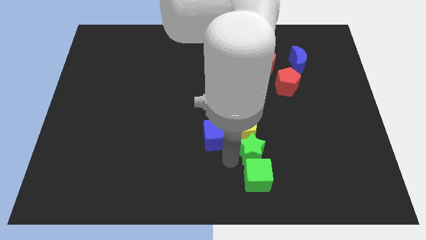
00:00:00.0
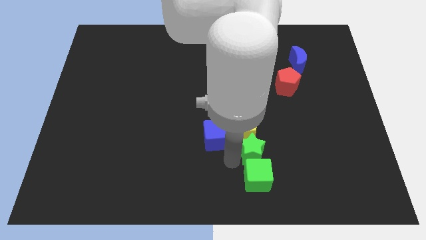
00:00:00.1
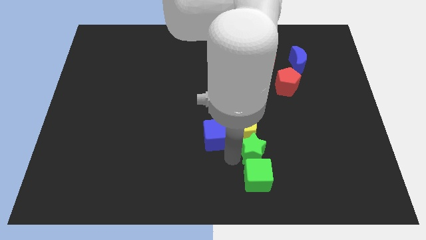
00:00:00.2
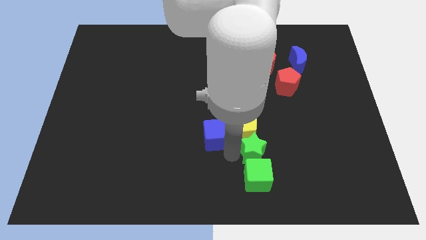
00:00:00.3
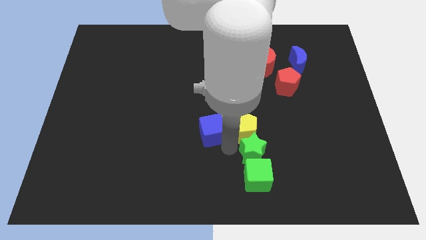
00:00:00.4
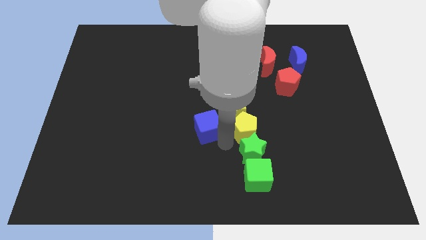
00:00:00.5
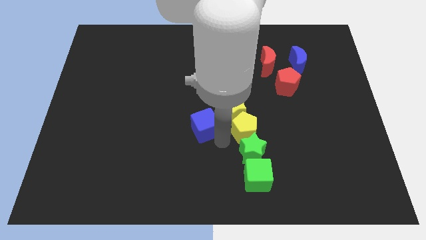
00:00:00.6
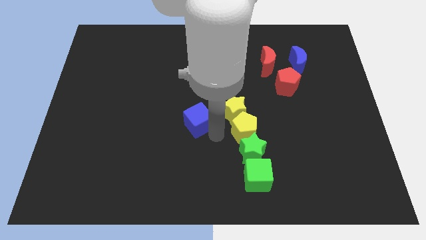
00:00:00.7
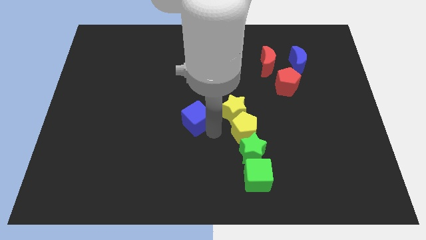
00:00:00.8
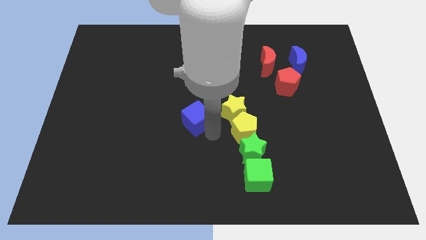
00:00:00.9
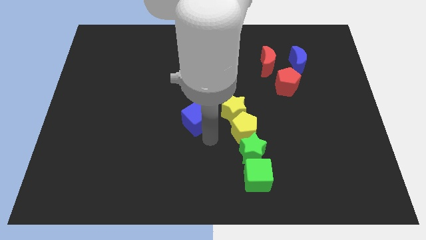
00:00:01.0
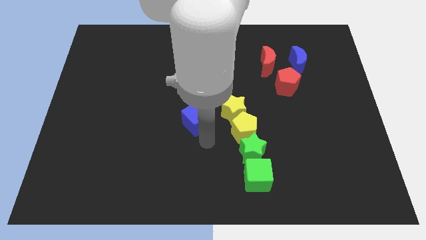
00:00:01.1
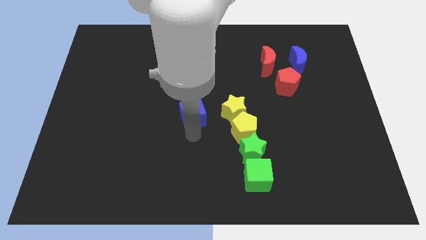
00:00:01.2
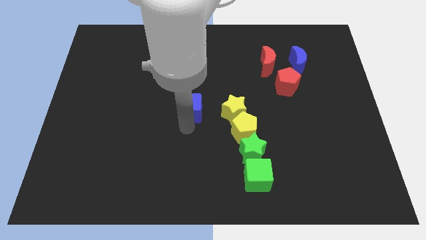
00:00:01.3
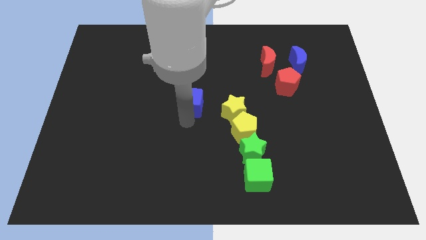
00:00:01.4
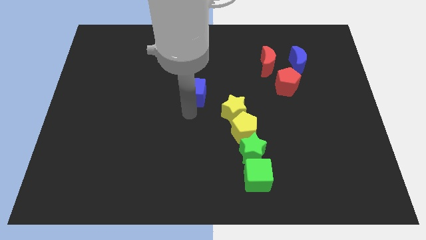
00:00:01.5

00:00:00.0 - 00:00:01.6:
move blue cube to the center of the board

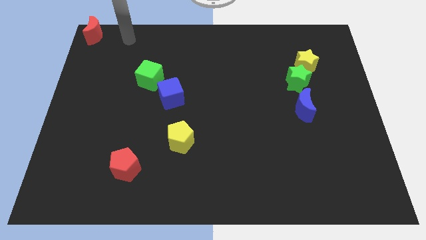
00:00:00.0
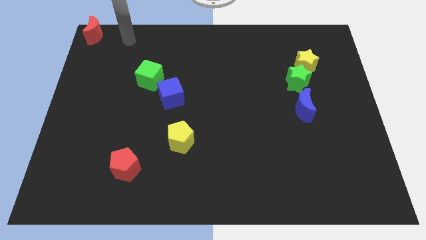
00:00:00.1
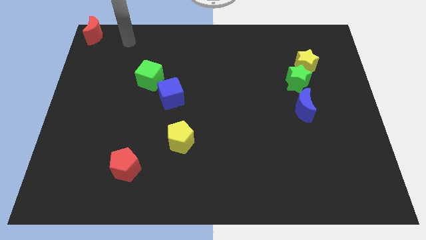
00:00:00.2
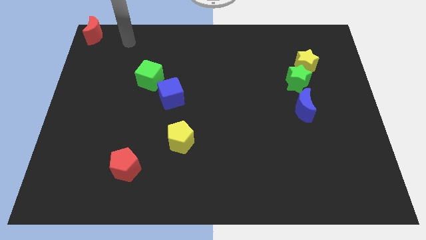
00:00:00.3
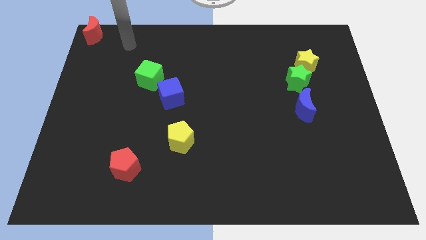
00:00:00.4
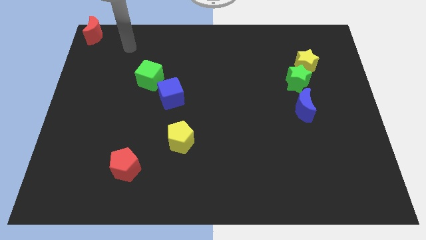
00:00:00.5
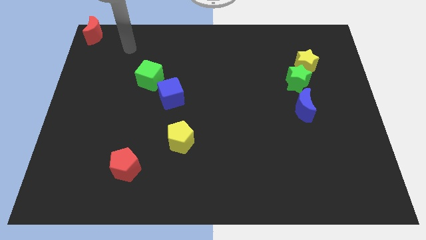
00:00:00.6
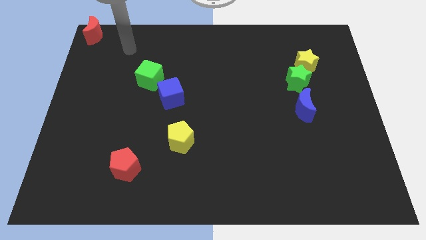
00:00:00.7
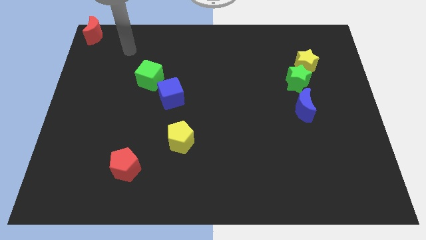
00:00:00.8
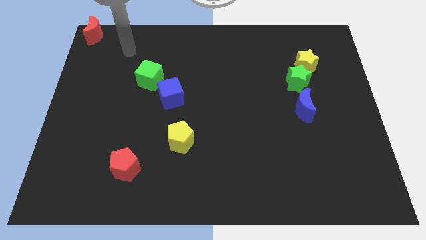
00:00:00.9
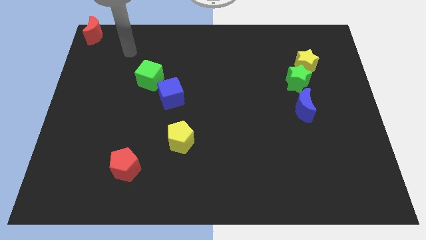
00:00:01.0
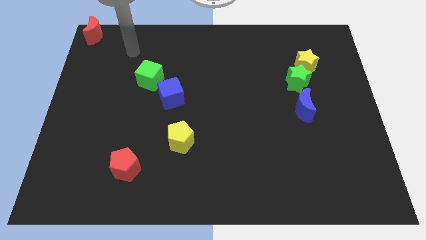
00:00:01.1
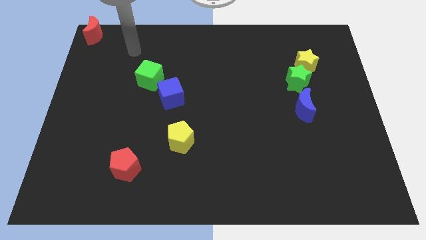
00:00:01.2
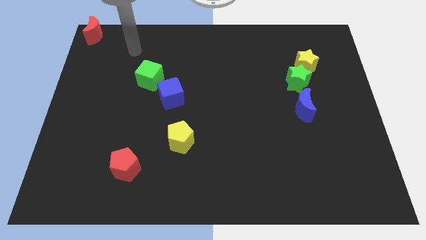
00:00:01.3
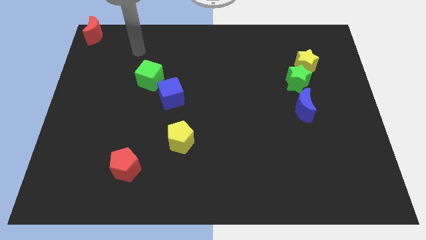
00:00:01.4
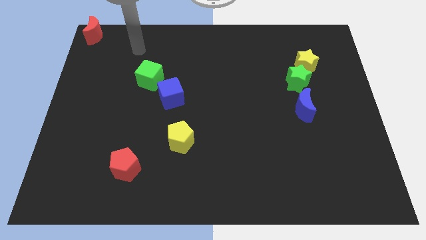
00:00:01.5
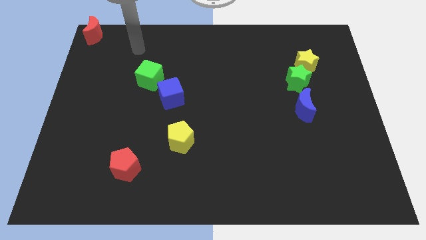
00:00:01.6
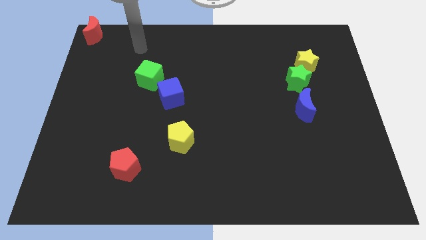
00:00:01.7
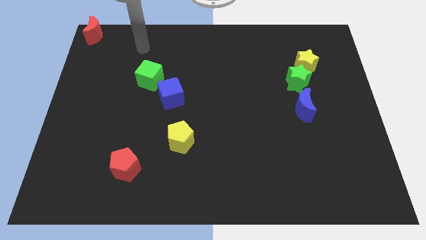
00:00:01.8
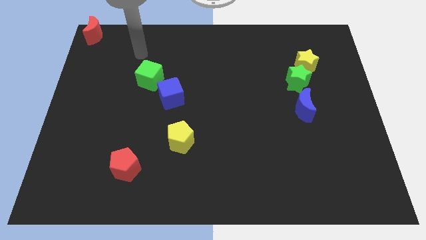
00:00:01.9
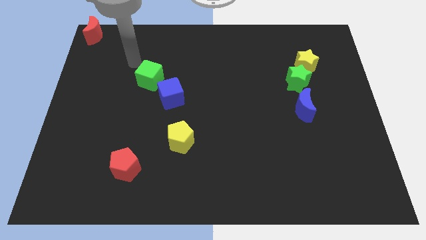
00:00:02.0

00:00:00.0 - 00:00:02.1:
move your arm to the top of the green cube

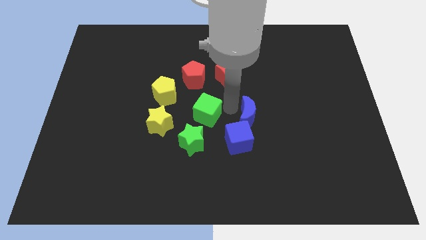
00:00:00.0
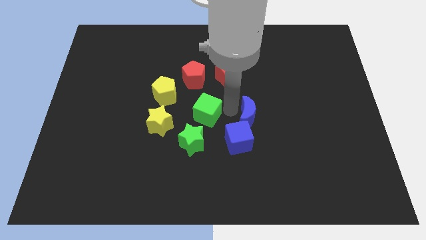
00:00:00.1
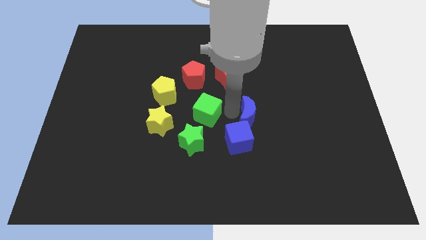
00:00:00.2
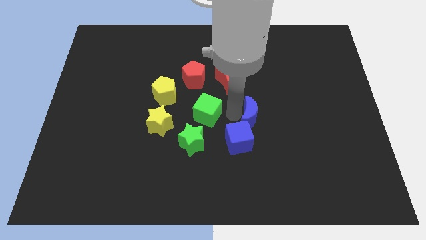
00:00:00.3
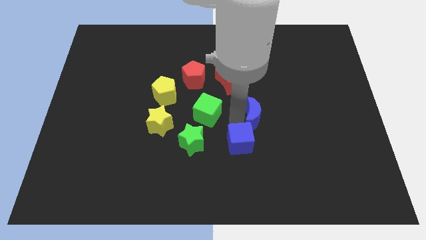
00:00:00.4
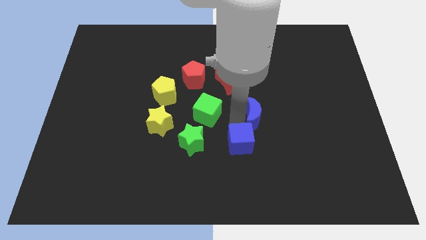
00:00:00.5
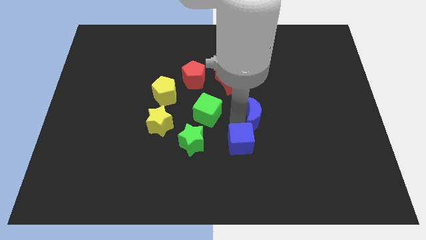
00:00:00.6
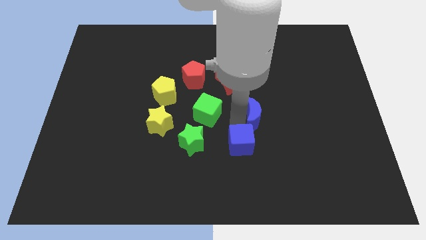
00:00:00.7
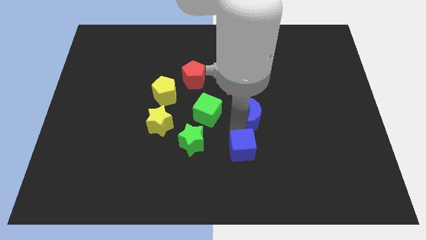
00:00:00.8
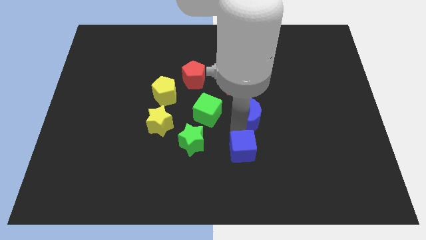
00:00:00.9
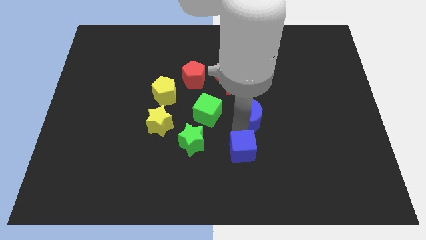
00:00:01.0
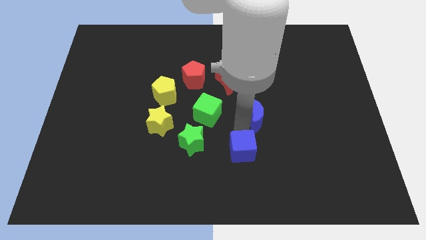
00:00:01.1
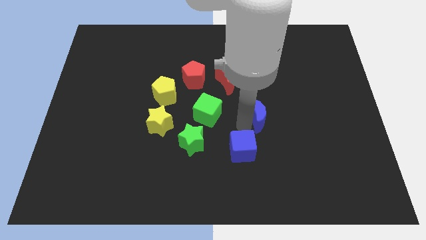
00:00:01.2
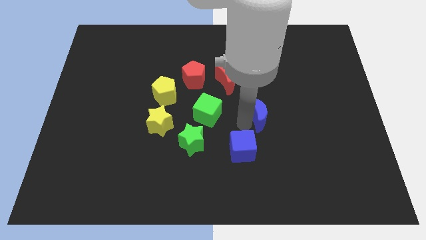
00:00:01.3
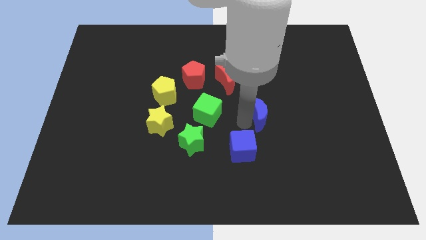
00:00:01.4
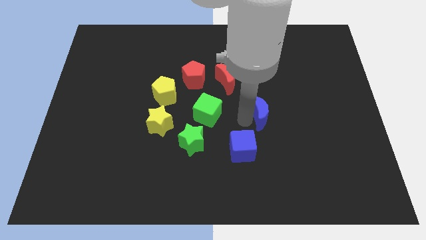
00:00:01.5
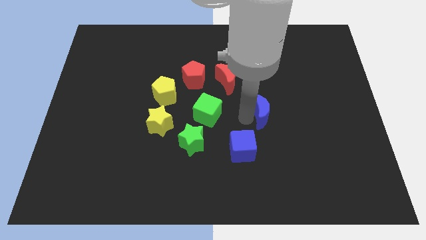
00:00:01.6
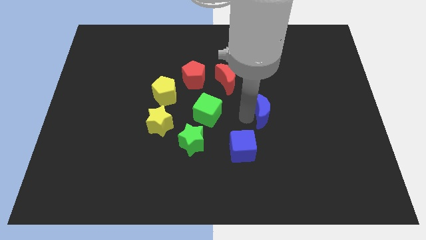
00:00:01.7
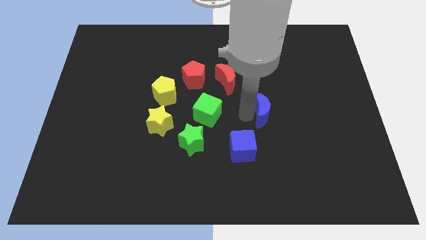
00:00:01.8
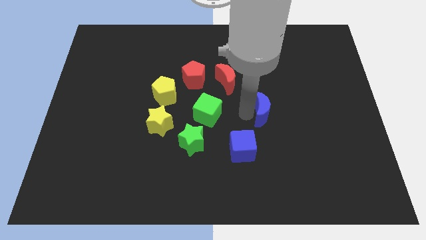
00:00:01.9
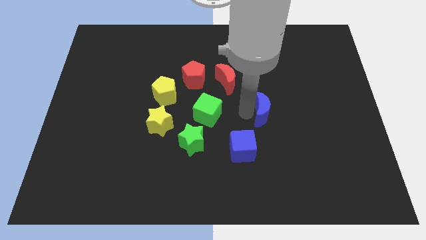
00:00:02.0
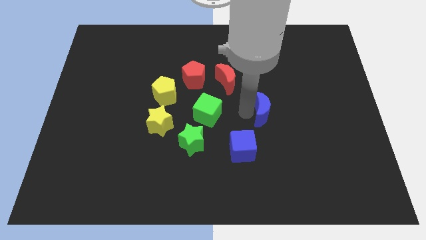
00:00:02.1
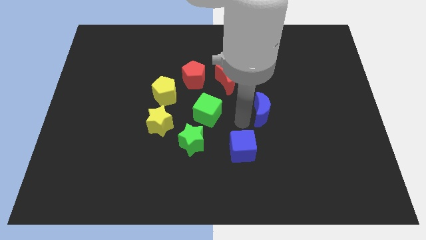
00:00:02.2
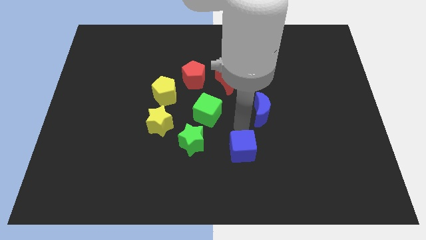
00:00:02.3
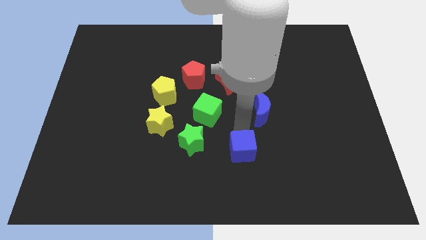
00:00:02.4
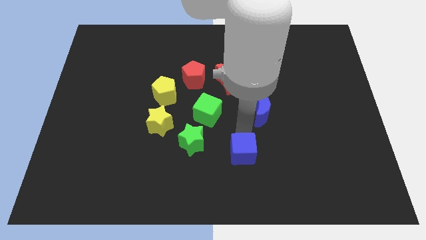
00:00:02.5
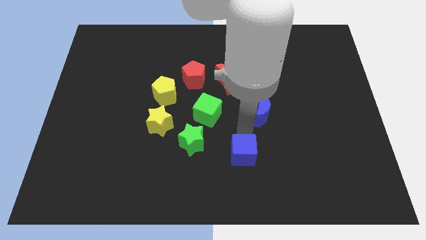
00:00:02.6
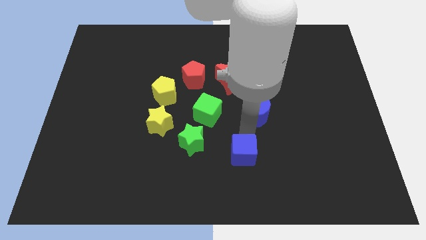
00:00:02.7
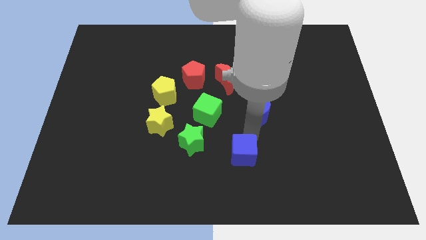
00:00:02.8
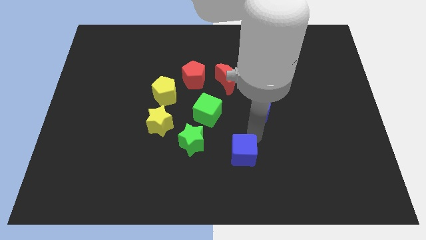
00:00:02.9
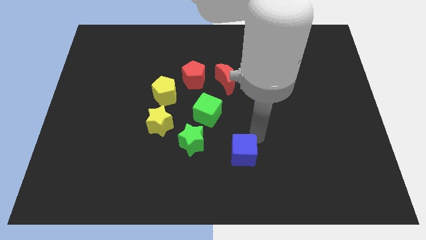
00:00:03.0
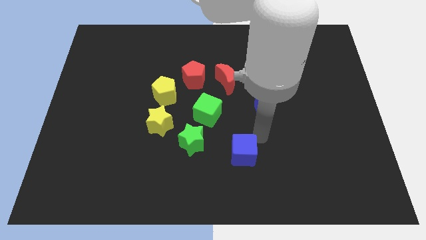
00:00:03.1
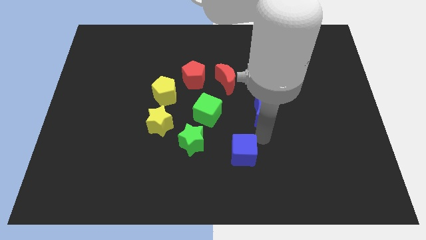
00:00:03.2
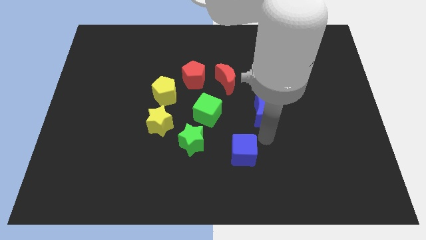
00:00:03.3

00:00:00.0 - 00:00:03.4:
separate blue cube from blue moon

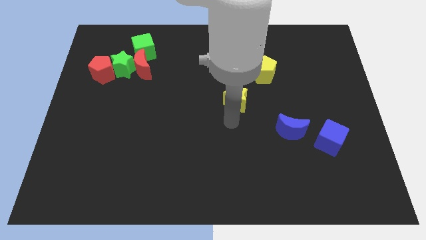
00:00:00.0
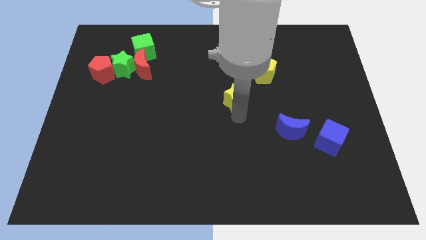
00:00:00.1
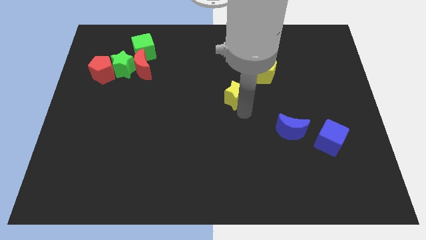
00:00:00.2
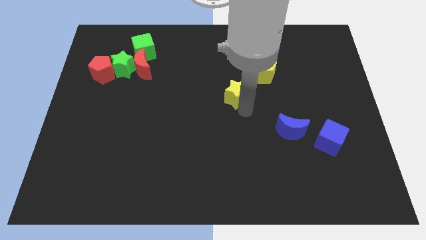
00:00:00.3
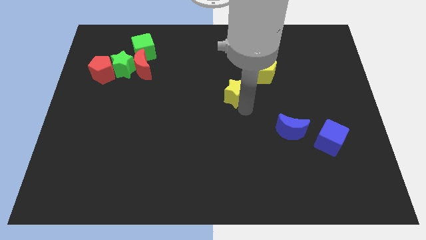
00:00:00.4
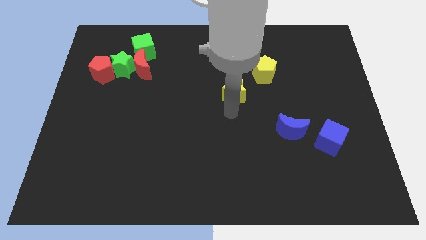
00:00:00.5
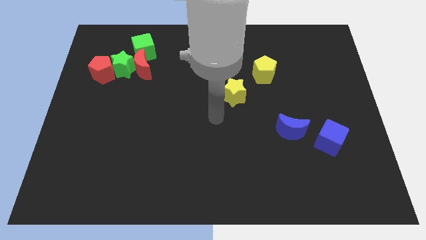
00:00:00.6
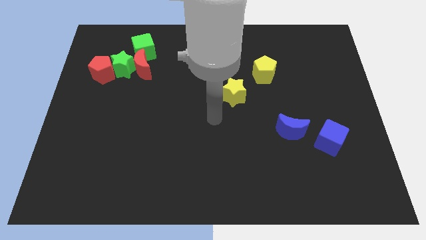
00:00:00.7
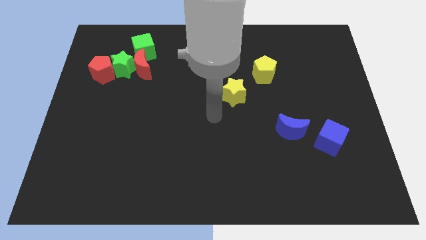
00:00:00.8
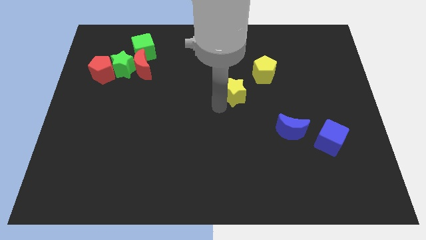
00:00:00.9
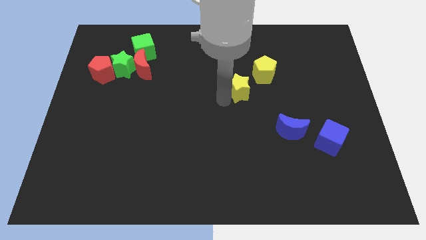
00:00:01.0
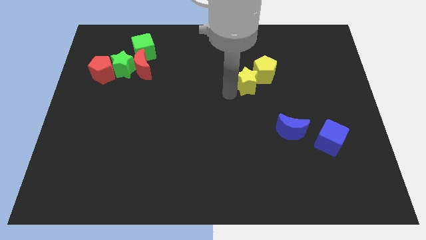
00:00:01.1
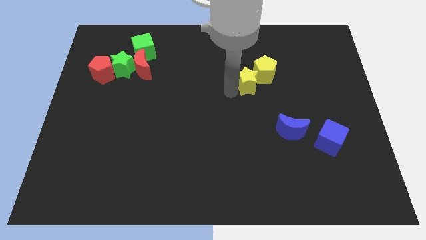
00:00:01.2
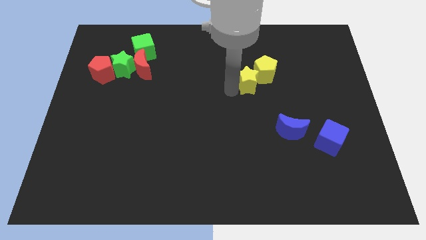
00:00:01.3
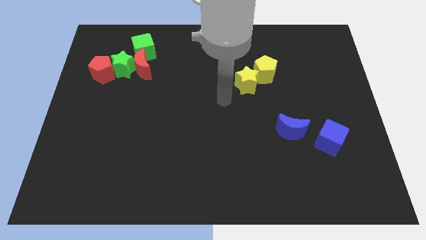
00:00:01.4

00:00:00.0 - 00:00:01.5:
move the yellow star close to the bottom left of the yellow pentagon

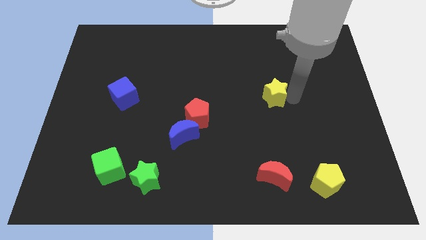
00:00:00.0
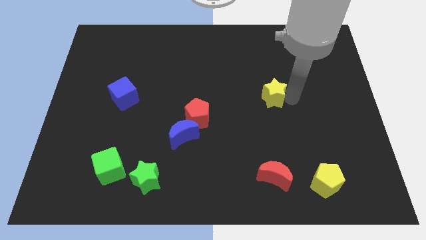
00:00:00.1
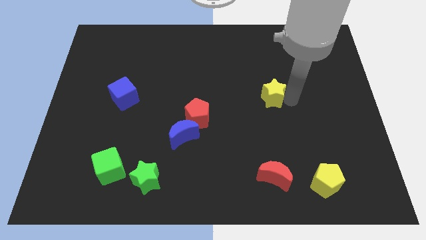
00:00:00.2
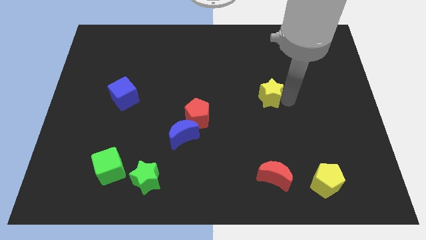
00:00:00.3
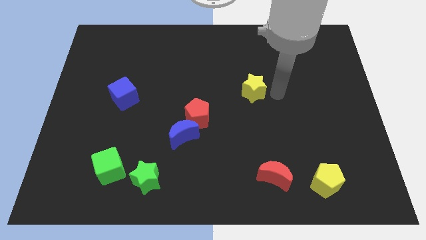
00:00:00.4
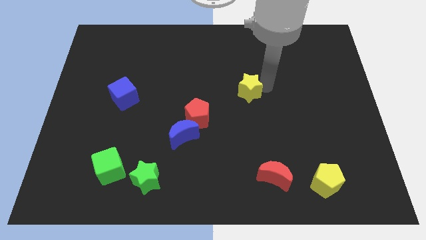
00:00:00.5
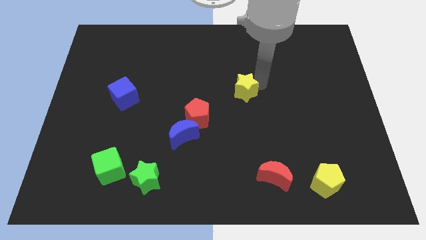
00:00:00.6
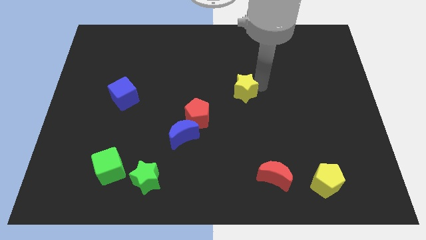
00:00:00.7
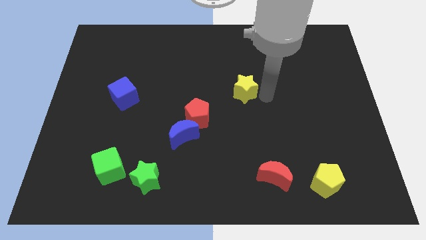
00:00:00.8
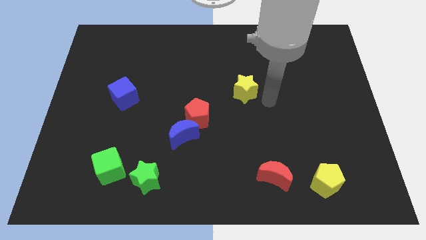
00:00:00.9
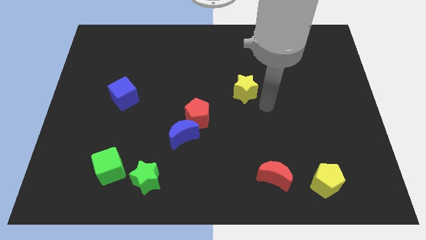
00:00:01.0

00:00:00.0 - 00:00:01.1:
push the yellow star to the left
